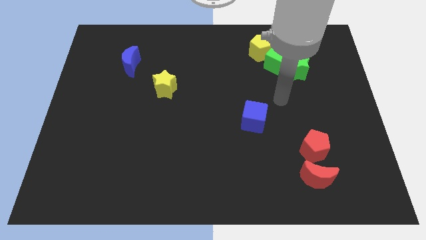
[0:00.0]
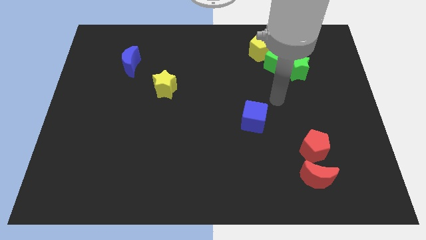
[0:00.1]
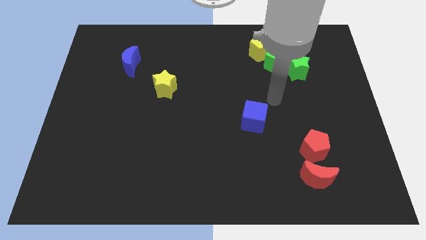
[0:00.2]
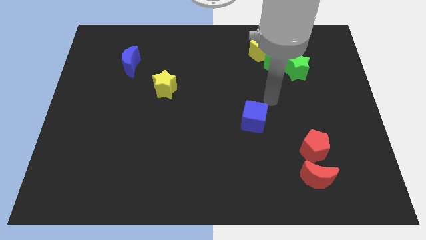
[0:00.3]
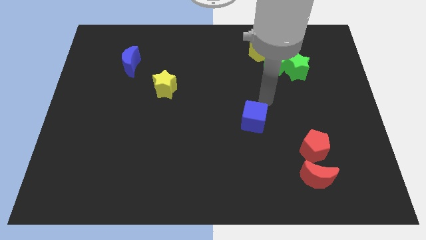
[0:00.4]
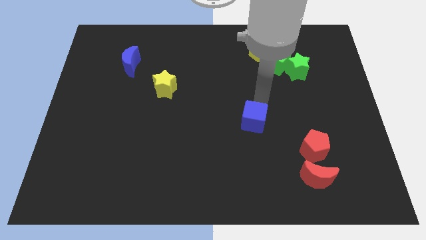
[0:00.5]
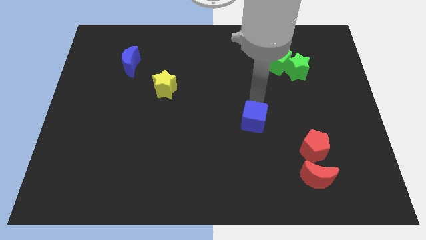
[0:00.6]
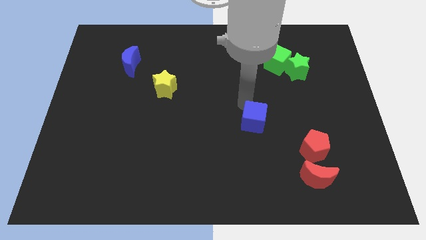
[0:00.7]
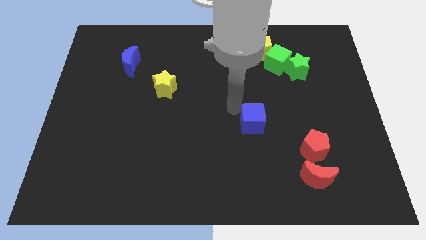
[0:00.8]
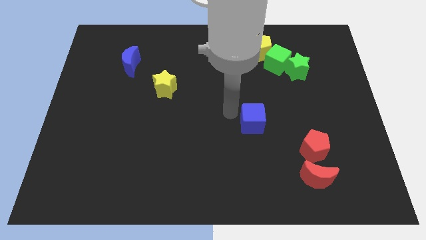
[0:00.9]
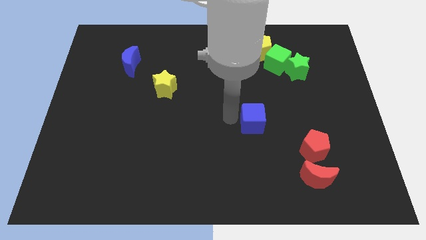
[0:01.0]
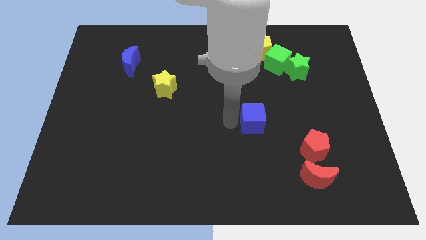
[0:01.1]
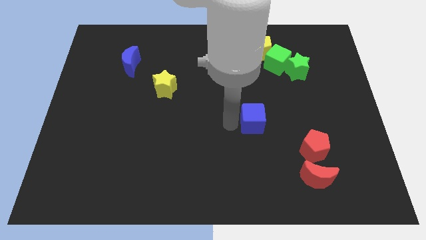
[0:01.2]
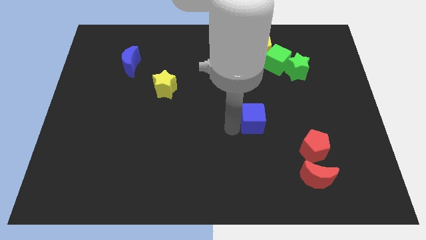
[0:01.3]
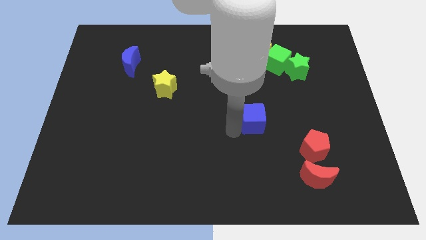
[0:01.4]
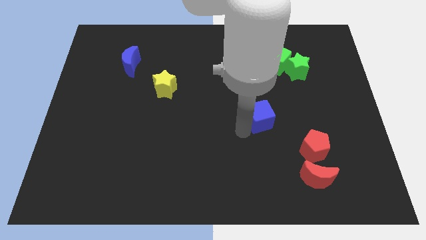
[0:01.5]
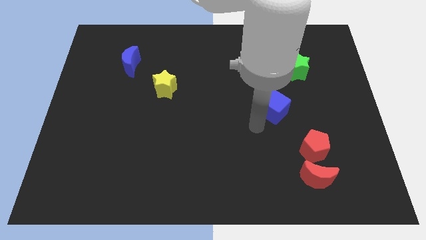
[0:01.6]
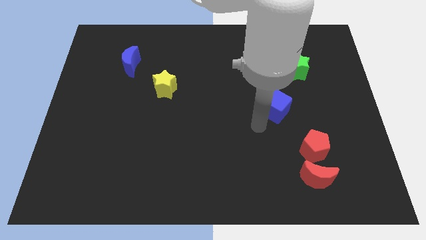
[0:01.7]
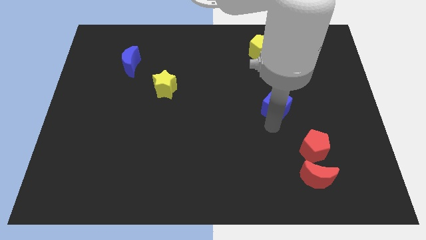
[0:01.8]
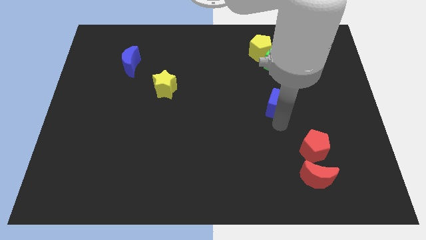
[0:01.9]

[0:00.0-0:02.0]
move the green cube to the bottom left side of the green star

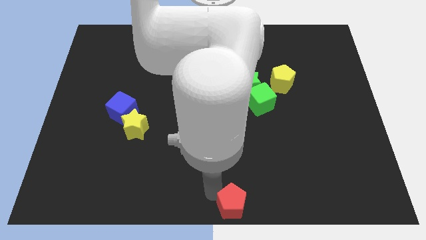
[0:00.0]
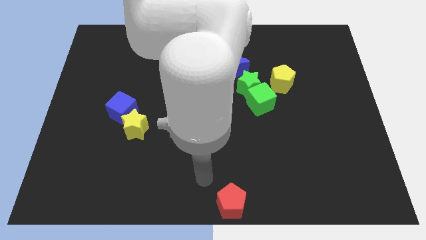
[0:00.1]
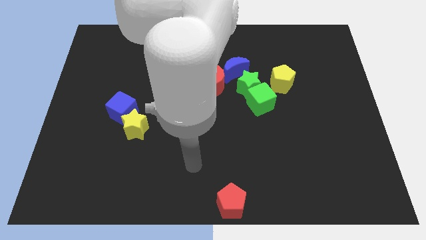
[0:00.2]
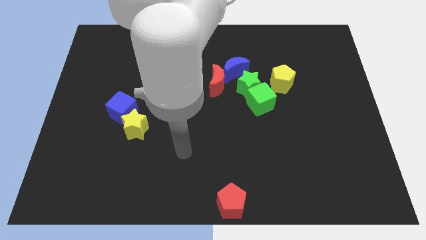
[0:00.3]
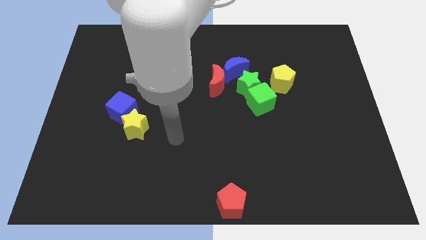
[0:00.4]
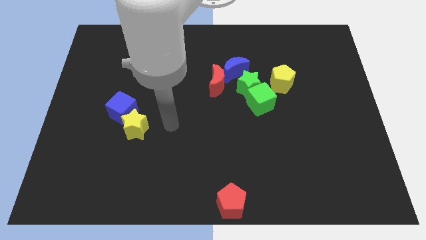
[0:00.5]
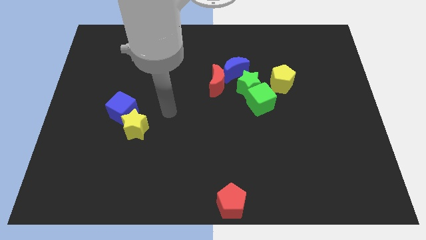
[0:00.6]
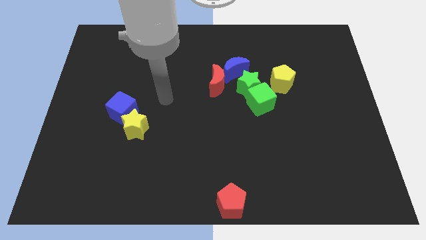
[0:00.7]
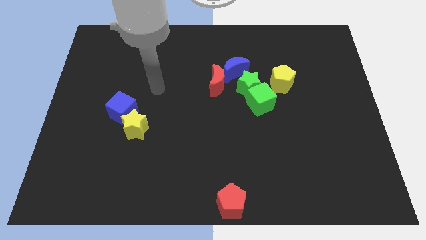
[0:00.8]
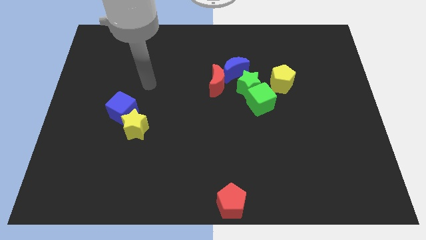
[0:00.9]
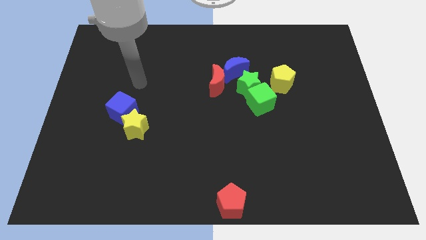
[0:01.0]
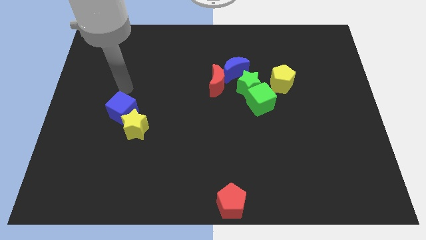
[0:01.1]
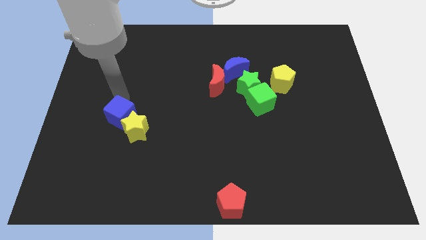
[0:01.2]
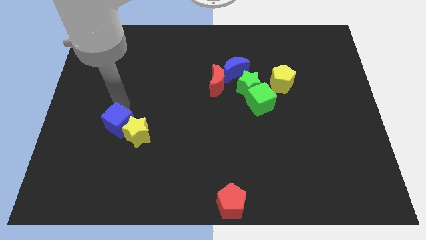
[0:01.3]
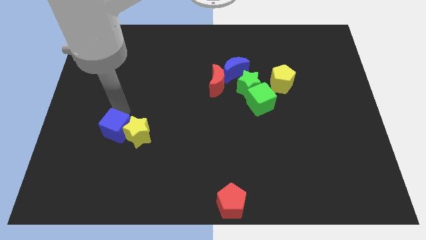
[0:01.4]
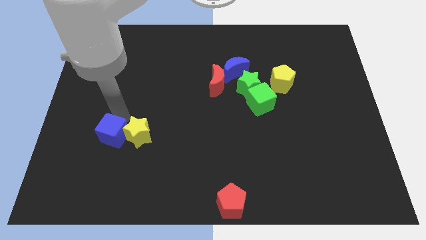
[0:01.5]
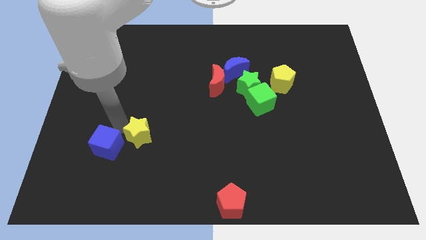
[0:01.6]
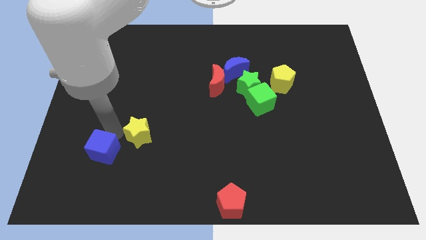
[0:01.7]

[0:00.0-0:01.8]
push the blue cube slightly to the bottom

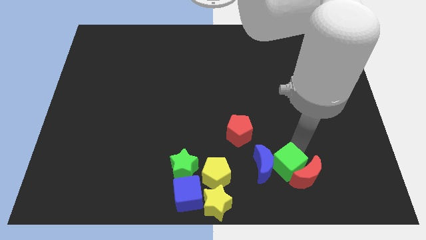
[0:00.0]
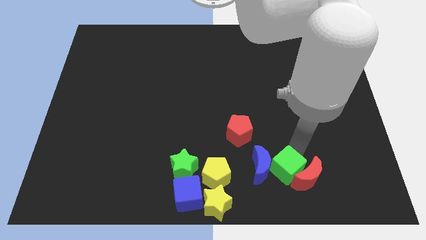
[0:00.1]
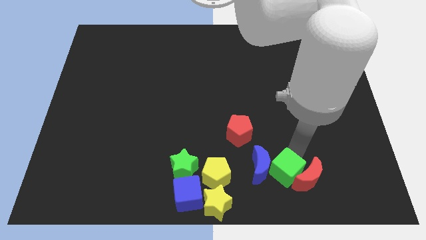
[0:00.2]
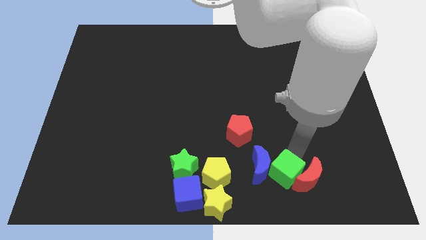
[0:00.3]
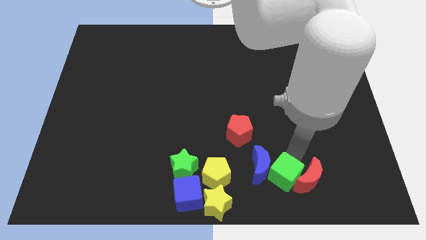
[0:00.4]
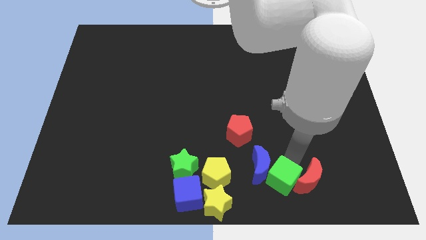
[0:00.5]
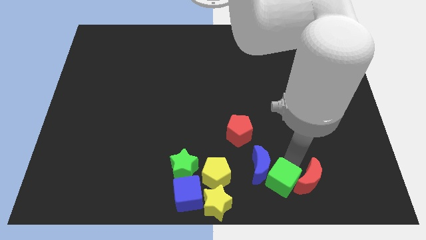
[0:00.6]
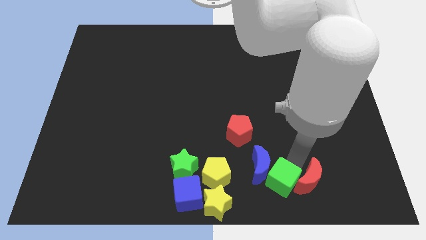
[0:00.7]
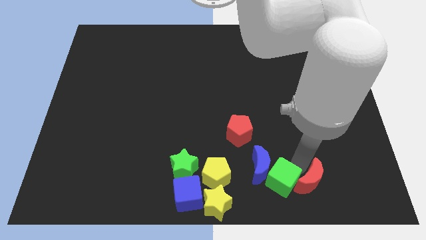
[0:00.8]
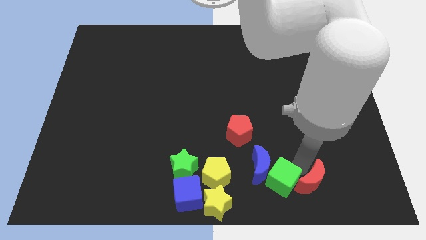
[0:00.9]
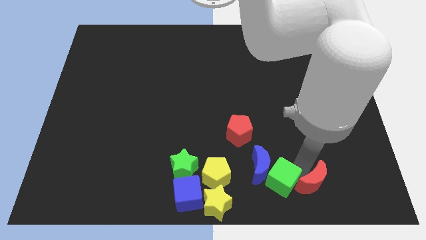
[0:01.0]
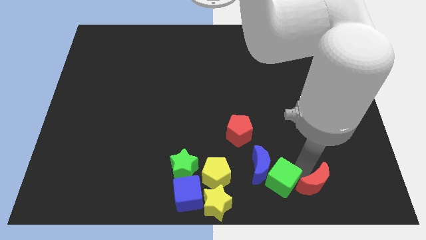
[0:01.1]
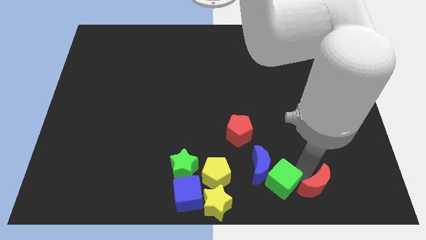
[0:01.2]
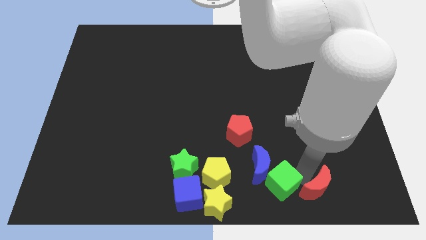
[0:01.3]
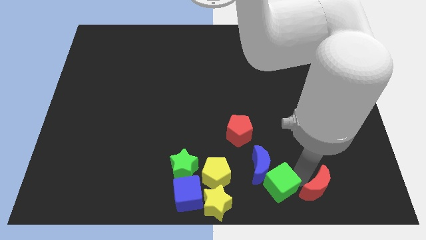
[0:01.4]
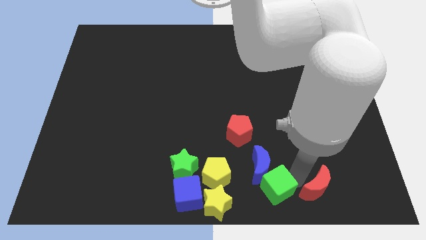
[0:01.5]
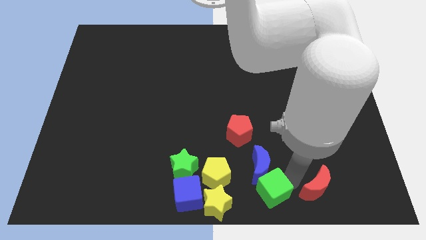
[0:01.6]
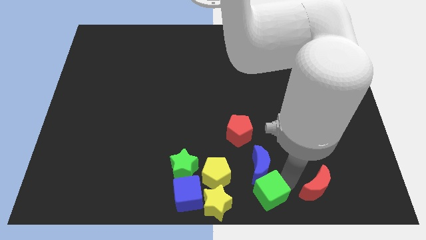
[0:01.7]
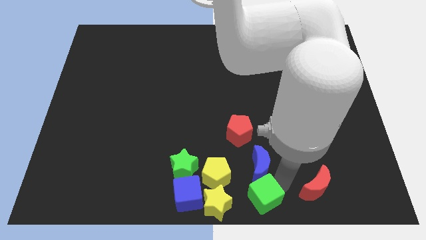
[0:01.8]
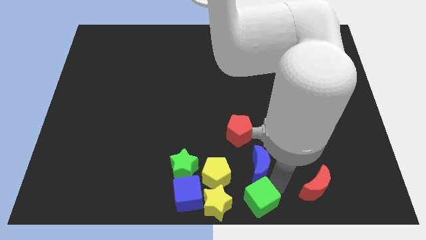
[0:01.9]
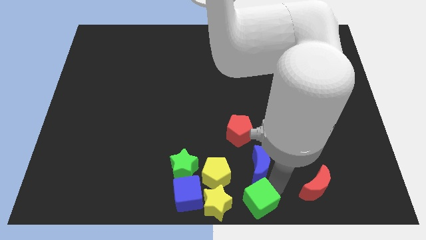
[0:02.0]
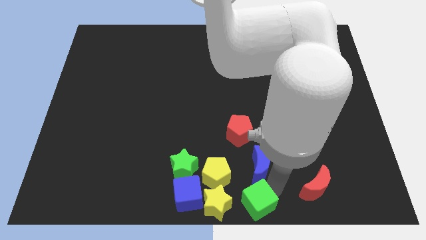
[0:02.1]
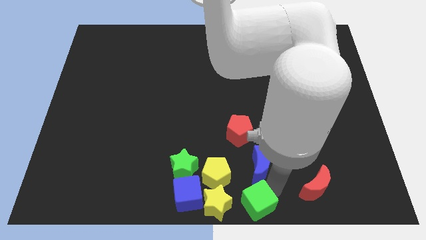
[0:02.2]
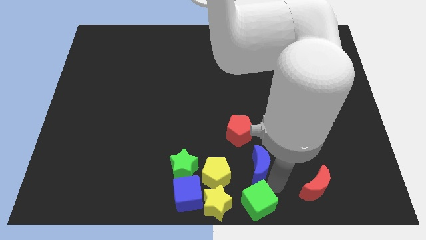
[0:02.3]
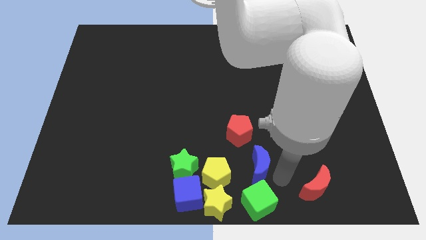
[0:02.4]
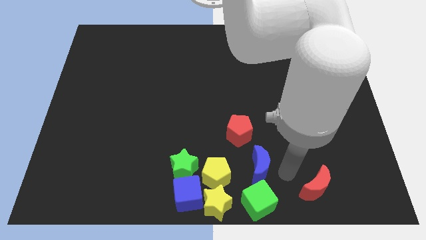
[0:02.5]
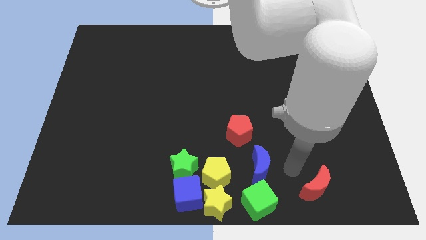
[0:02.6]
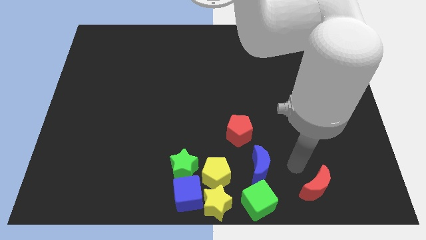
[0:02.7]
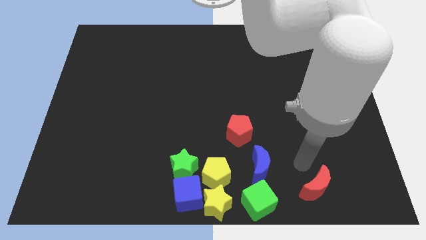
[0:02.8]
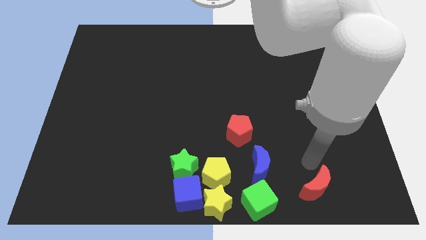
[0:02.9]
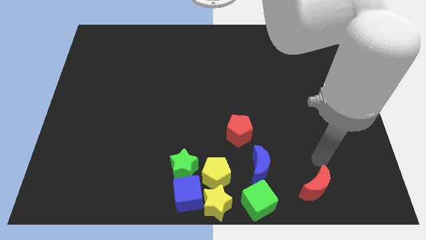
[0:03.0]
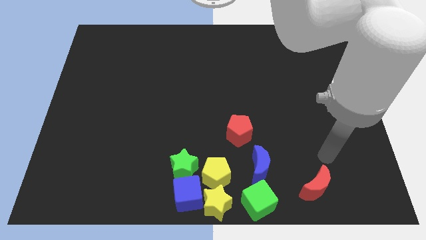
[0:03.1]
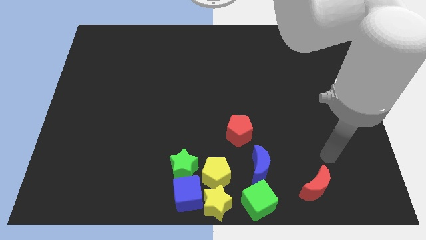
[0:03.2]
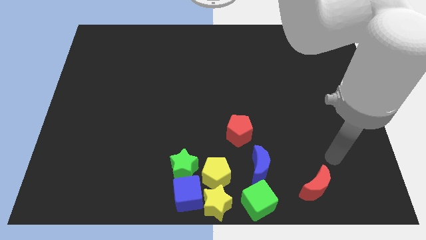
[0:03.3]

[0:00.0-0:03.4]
place the green cube right to the yellow star

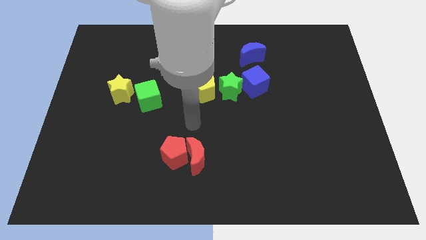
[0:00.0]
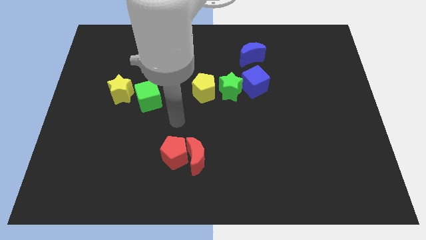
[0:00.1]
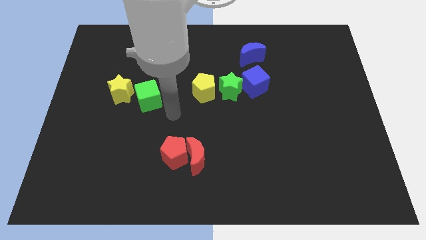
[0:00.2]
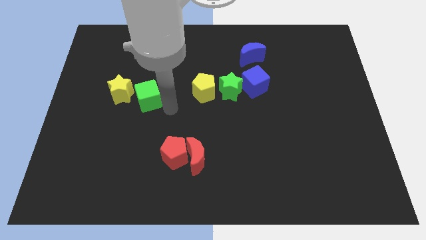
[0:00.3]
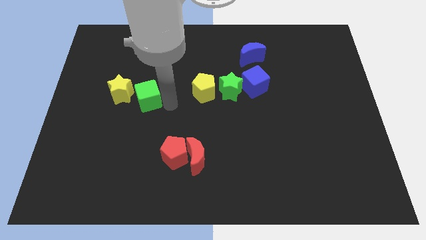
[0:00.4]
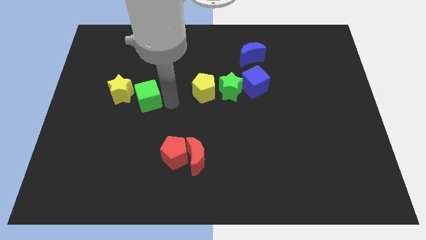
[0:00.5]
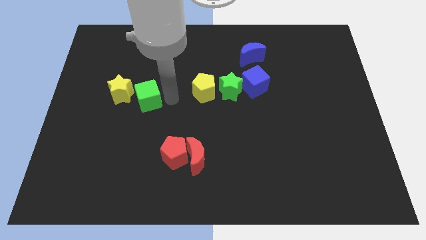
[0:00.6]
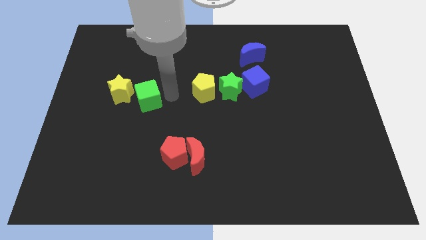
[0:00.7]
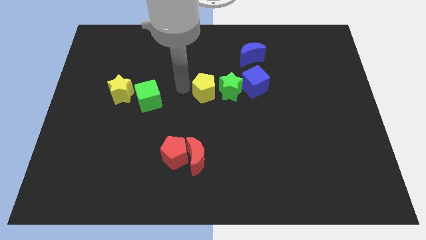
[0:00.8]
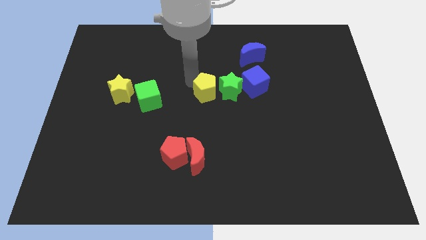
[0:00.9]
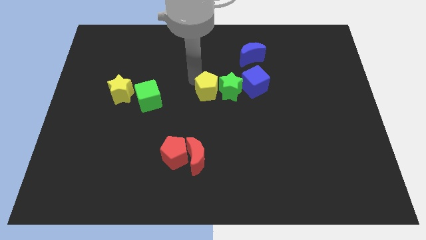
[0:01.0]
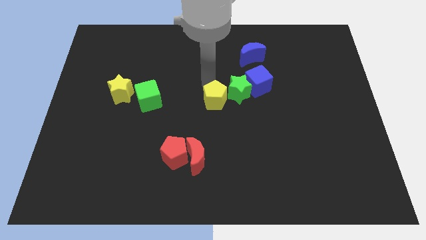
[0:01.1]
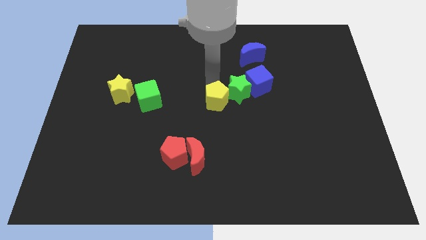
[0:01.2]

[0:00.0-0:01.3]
move the yellow pentagon into green star

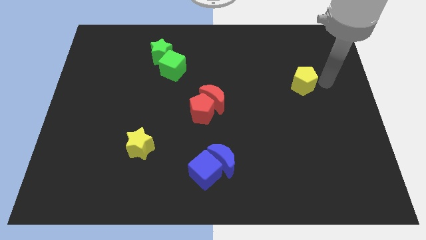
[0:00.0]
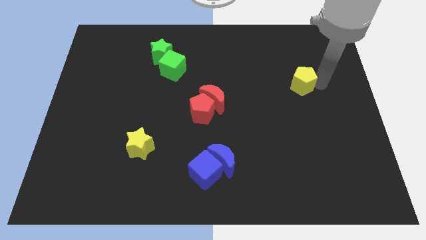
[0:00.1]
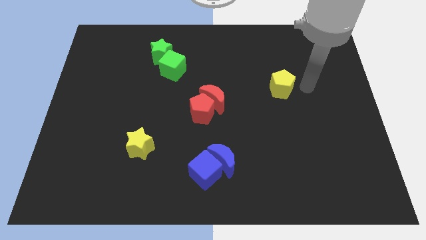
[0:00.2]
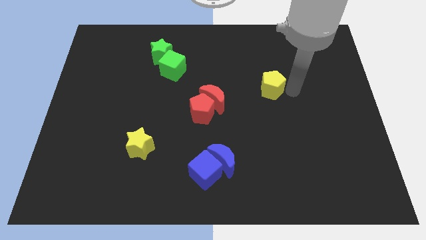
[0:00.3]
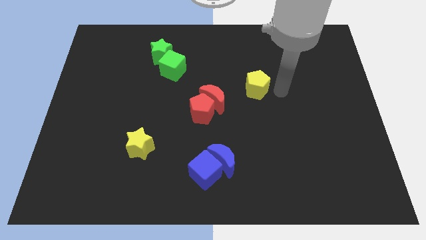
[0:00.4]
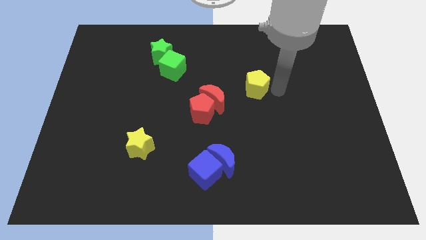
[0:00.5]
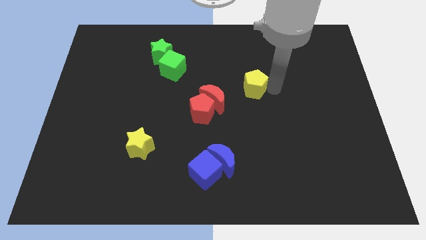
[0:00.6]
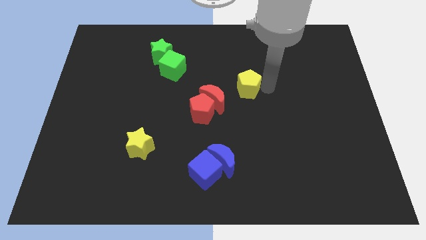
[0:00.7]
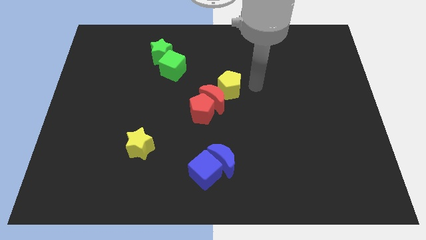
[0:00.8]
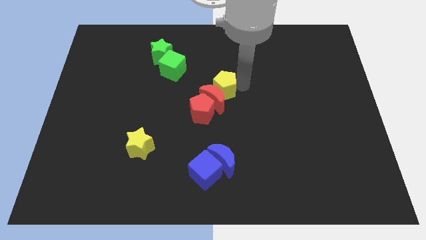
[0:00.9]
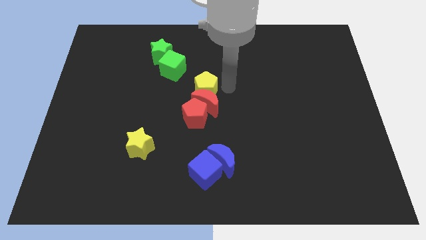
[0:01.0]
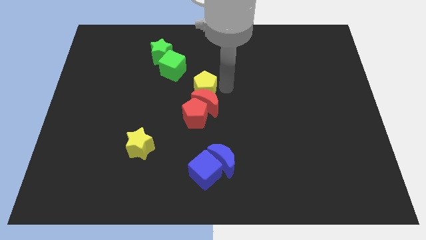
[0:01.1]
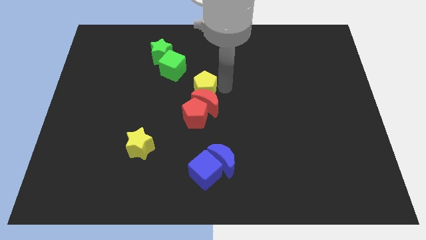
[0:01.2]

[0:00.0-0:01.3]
arrange the yellow pentagon on the top of the red crescent
